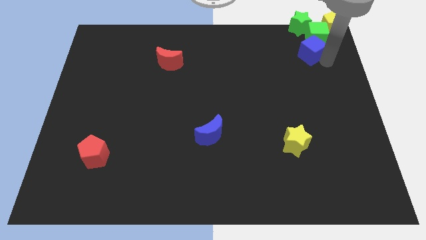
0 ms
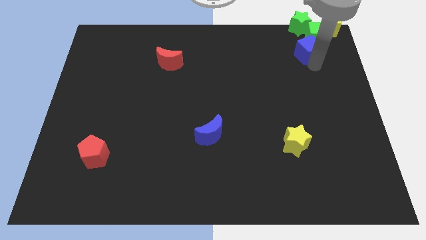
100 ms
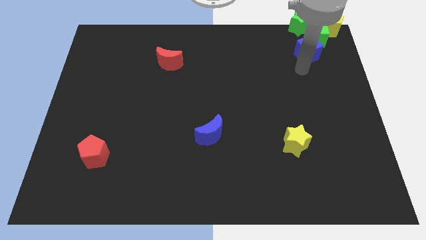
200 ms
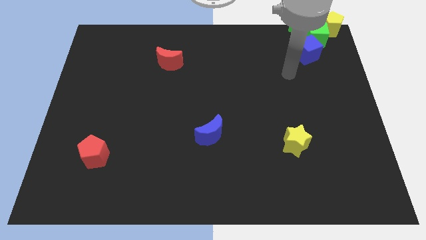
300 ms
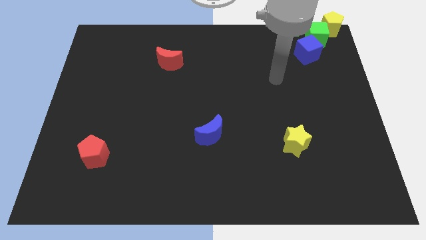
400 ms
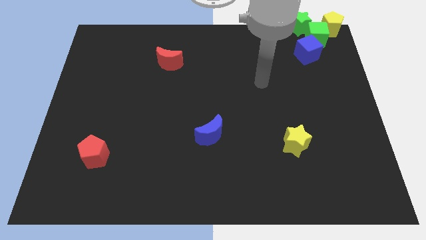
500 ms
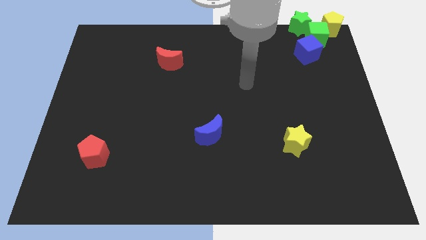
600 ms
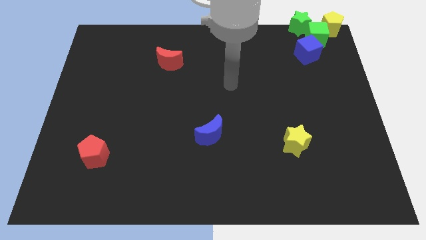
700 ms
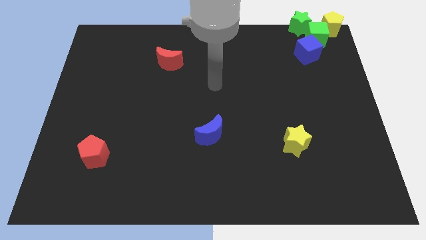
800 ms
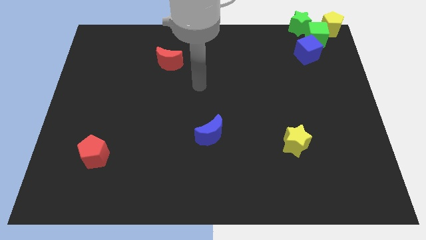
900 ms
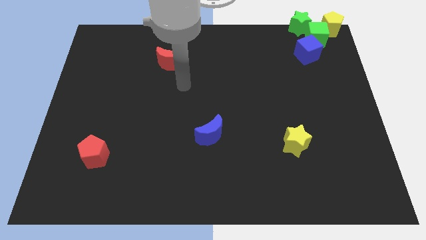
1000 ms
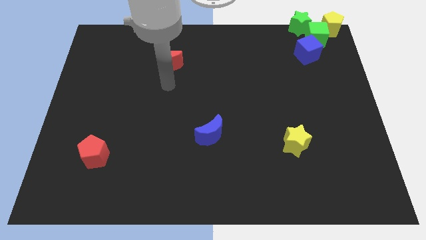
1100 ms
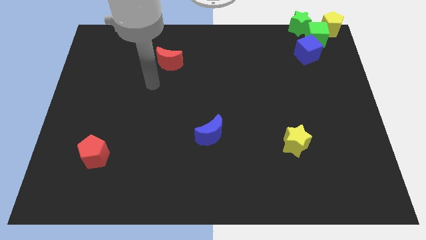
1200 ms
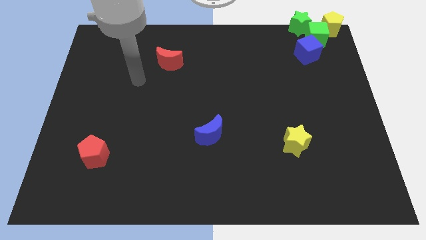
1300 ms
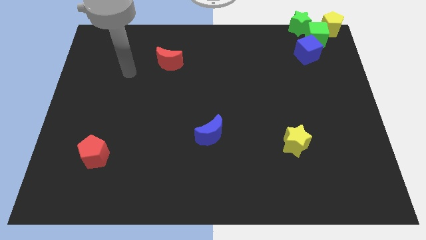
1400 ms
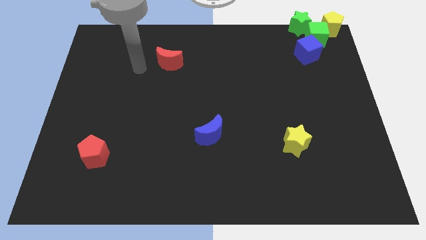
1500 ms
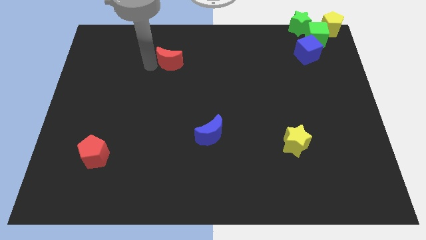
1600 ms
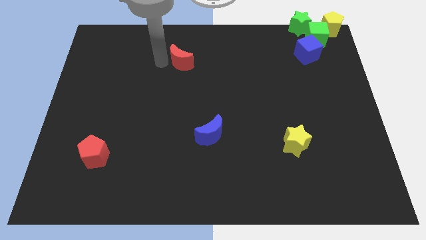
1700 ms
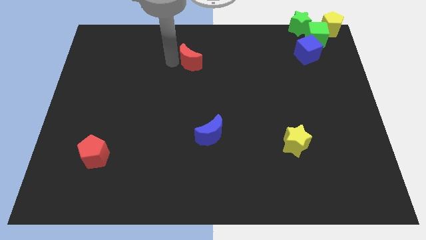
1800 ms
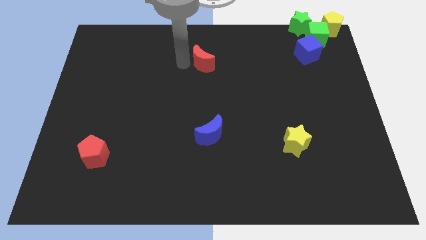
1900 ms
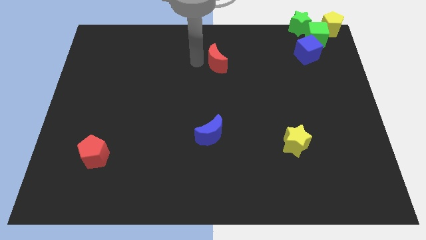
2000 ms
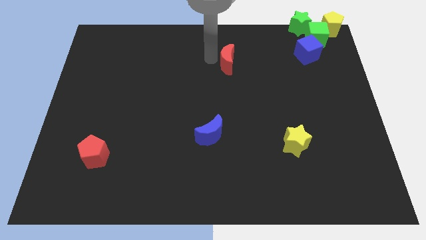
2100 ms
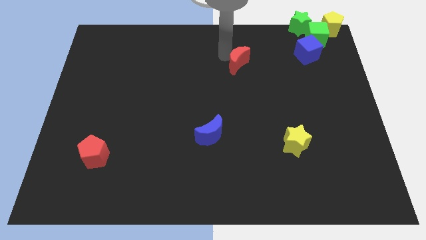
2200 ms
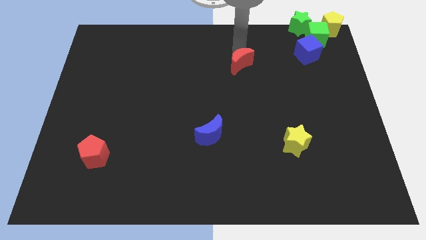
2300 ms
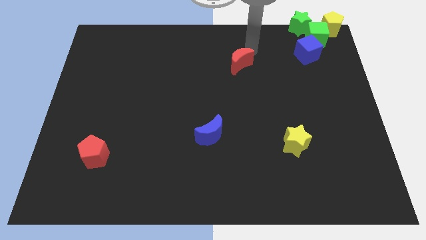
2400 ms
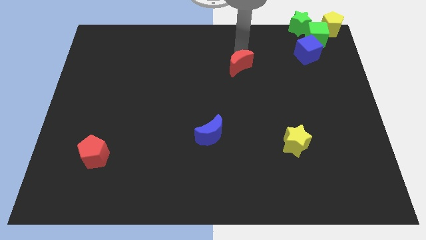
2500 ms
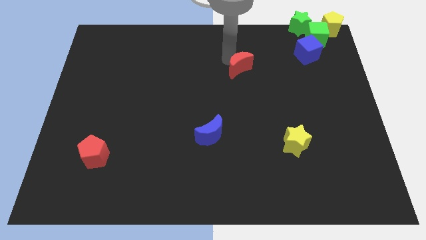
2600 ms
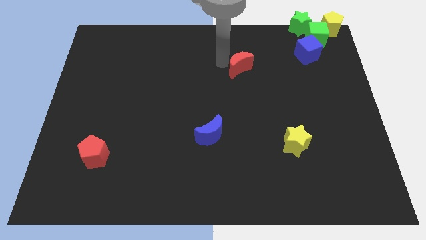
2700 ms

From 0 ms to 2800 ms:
place the red moon diagonally to the top left of the yellow star

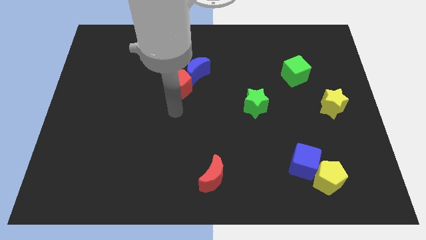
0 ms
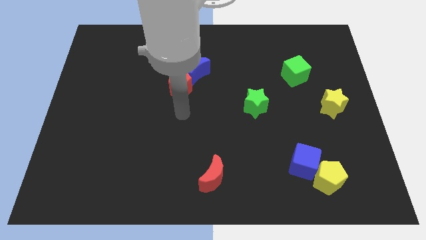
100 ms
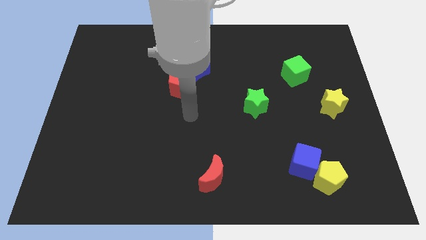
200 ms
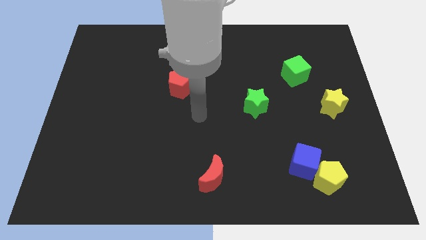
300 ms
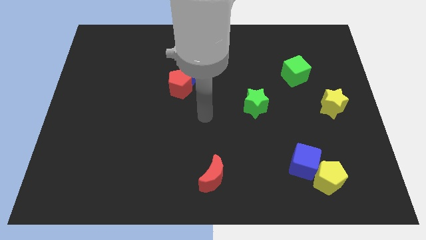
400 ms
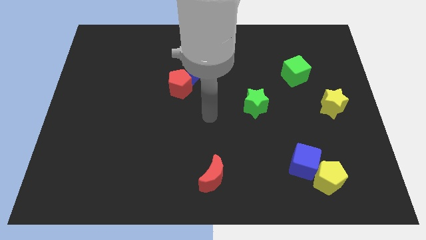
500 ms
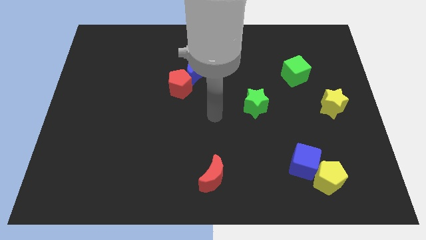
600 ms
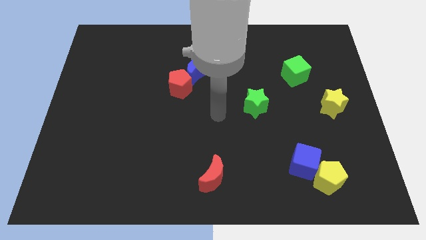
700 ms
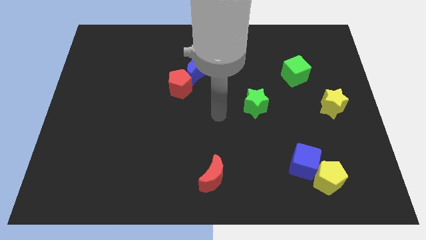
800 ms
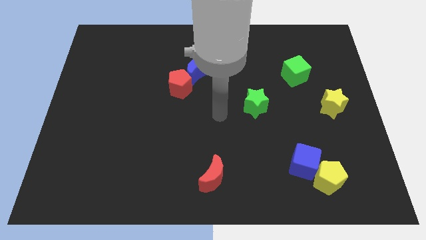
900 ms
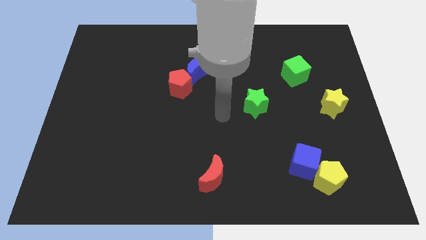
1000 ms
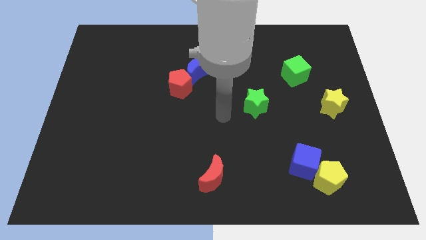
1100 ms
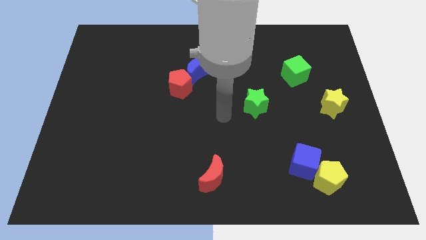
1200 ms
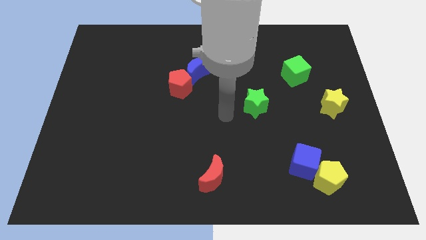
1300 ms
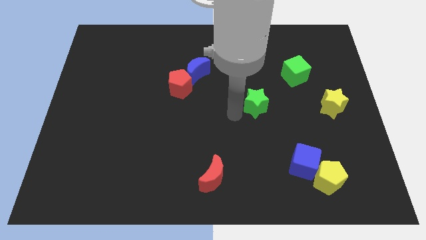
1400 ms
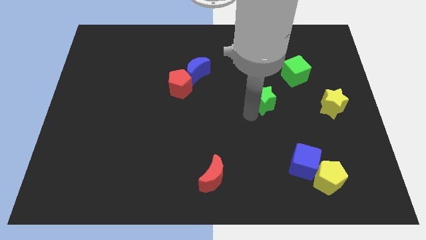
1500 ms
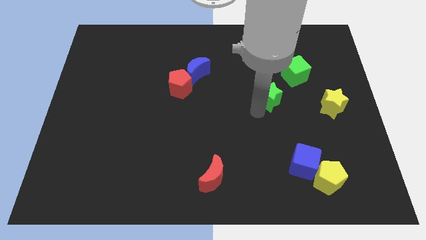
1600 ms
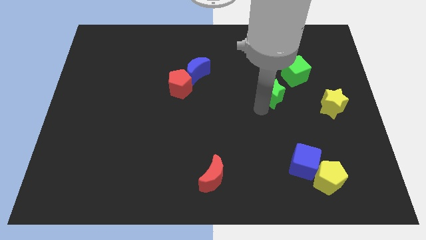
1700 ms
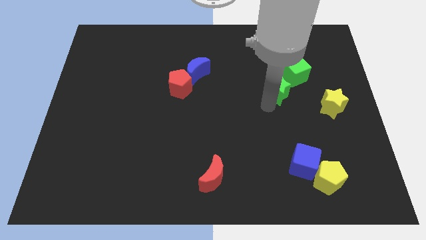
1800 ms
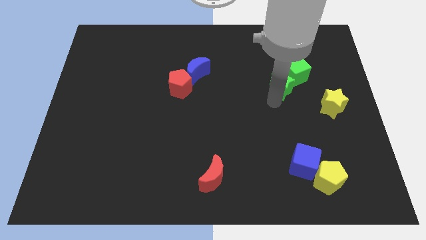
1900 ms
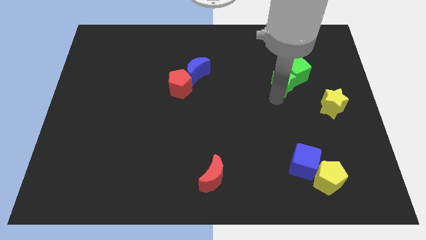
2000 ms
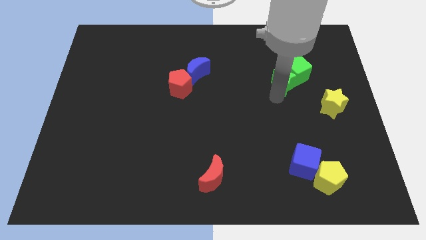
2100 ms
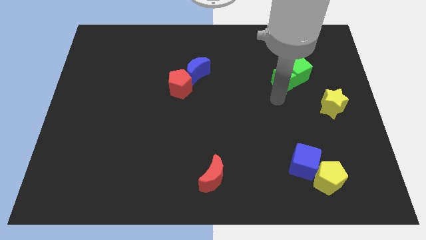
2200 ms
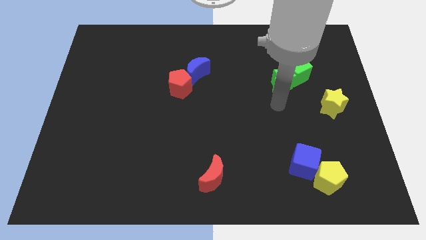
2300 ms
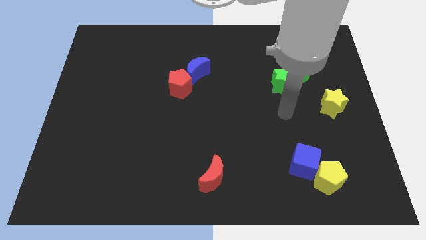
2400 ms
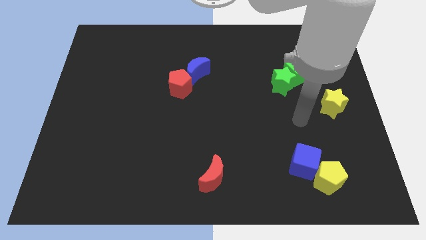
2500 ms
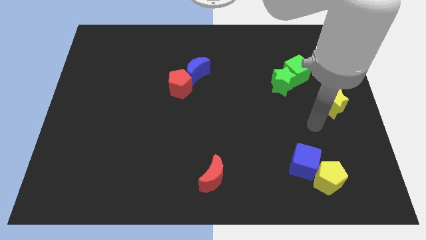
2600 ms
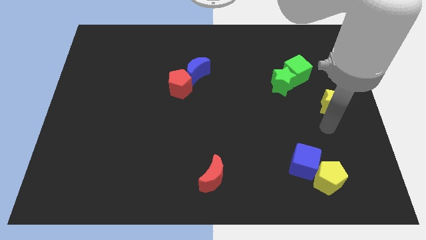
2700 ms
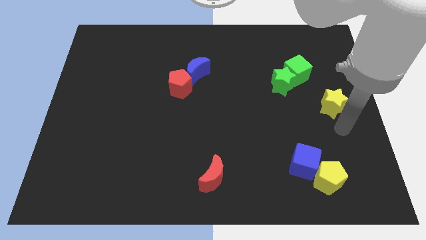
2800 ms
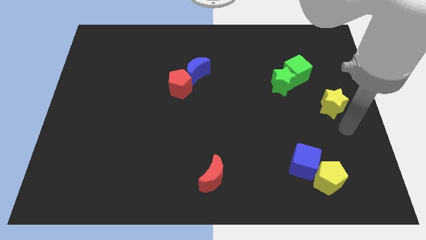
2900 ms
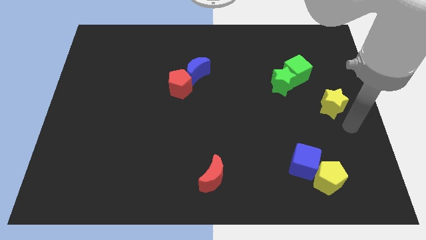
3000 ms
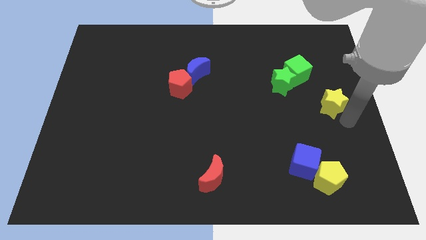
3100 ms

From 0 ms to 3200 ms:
push the green star to the bottom left side of the green cube

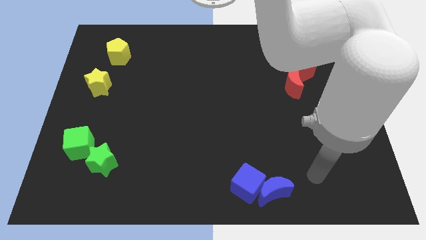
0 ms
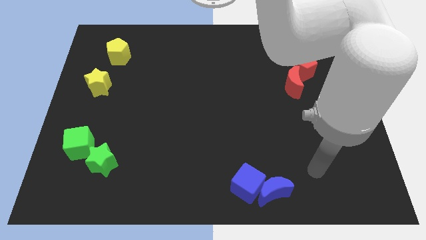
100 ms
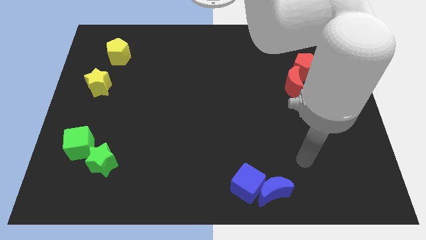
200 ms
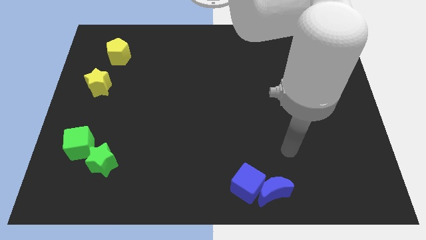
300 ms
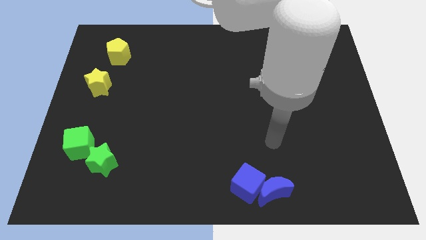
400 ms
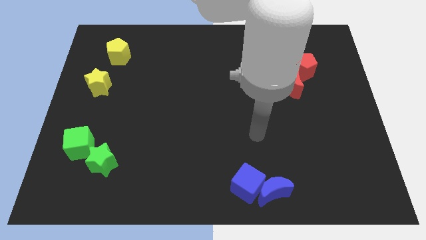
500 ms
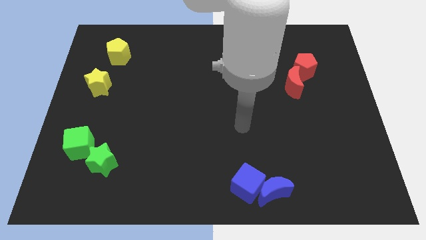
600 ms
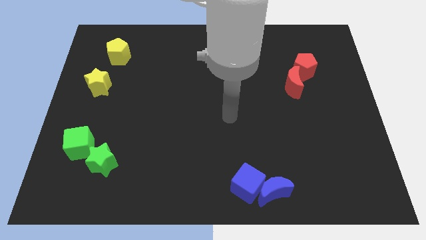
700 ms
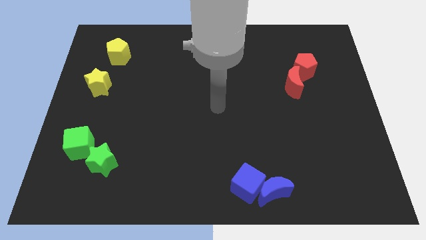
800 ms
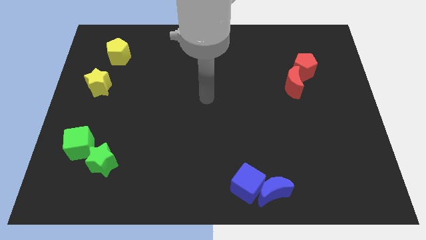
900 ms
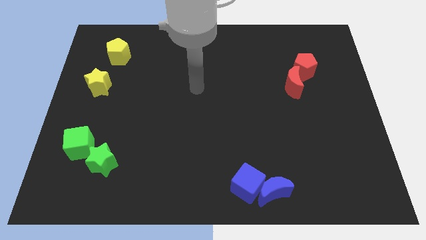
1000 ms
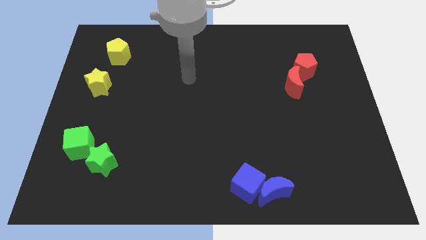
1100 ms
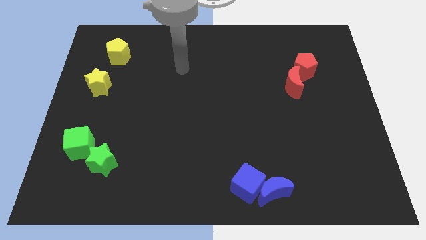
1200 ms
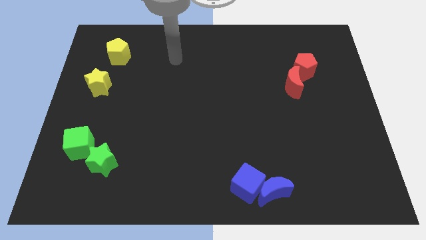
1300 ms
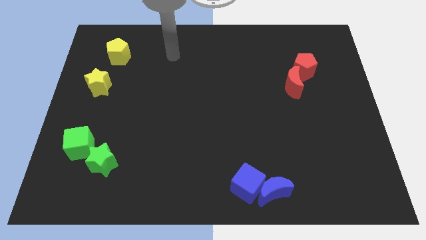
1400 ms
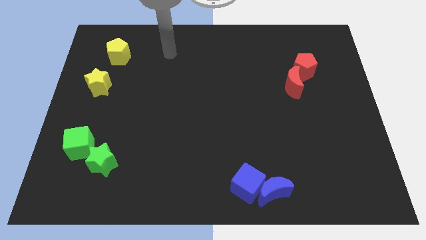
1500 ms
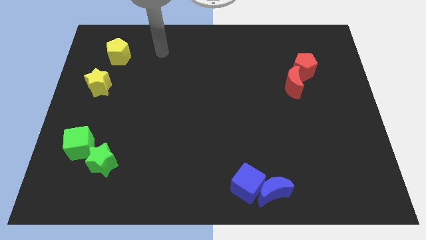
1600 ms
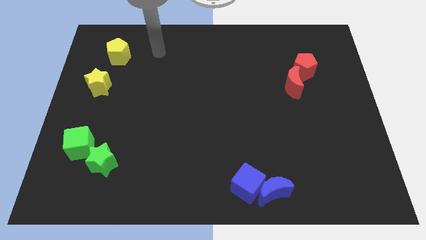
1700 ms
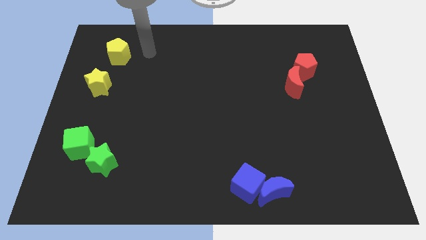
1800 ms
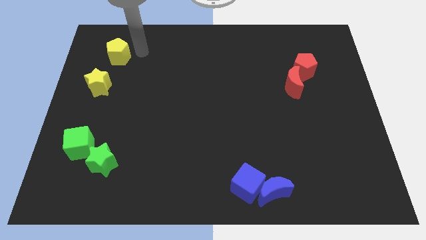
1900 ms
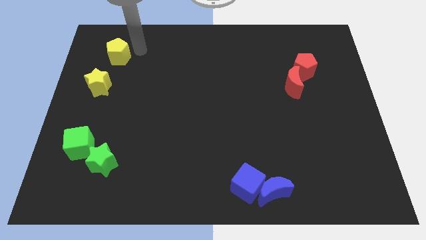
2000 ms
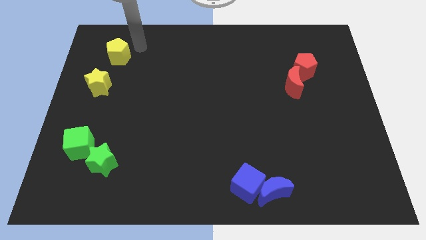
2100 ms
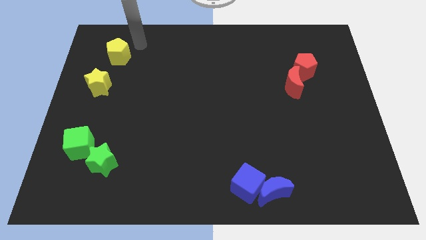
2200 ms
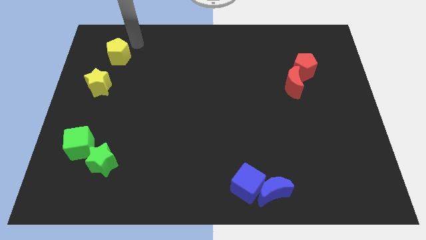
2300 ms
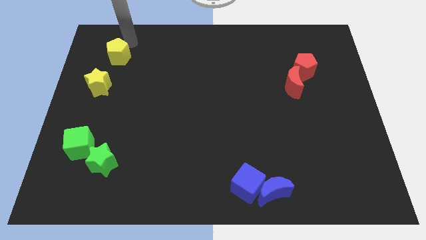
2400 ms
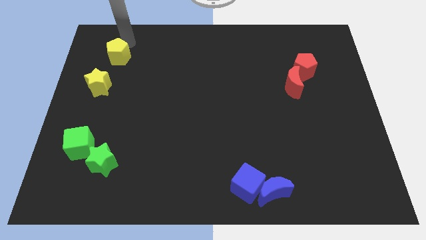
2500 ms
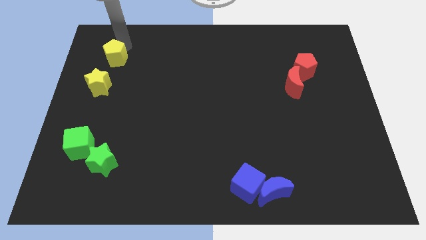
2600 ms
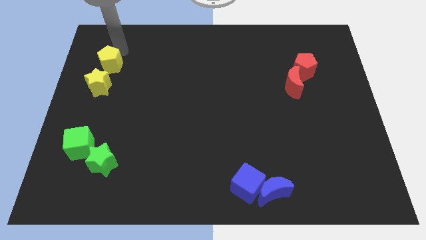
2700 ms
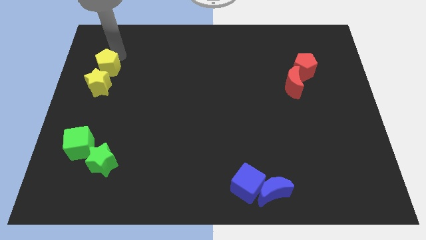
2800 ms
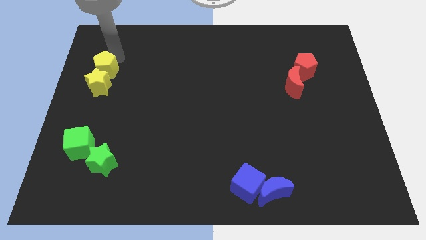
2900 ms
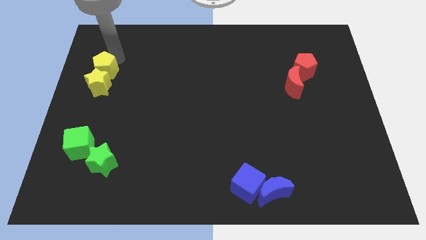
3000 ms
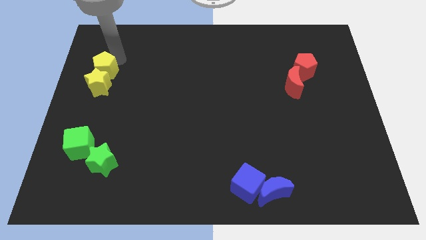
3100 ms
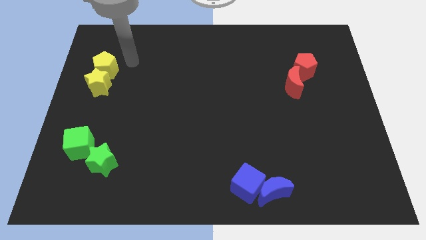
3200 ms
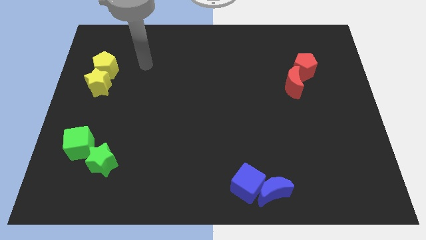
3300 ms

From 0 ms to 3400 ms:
place yellow pentagon at the top of the yellow star
